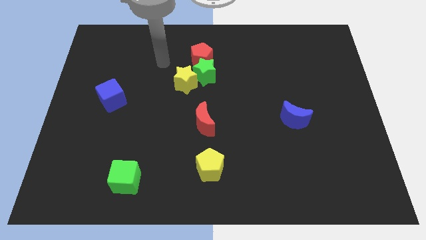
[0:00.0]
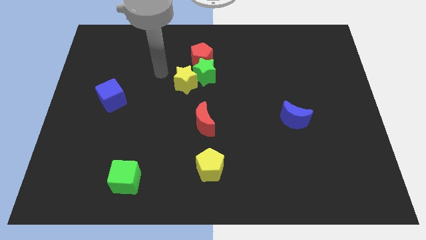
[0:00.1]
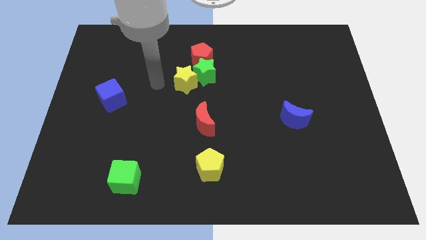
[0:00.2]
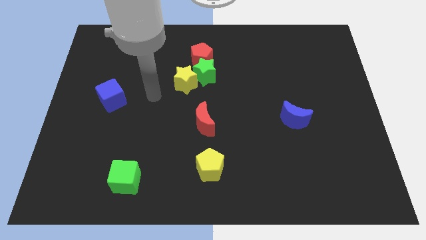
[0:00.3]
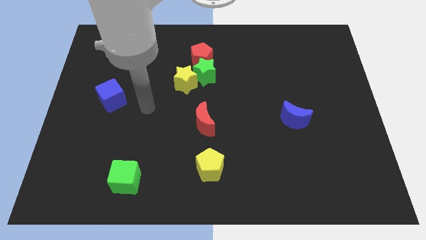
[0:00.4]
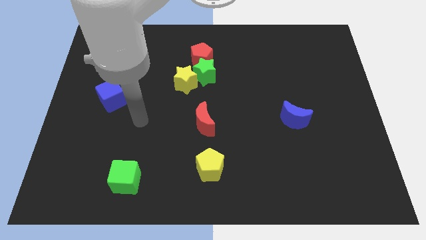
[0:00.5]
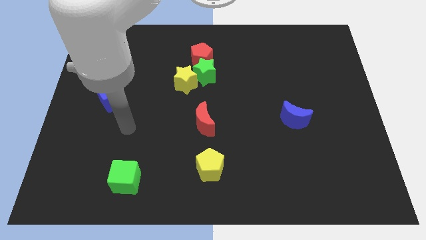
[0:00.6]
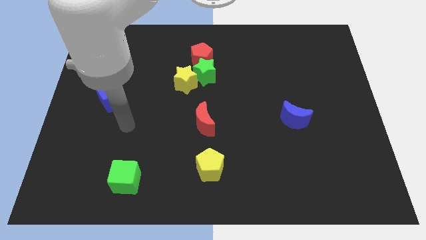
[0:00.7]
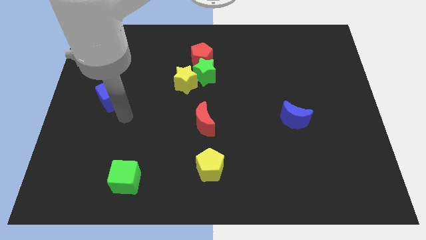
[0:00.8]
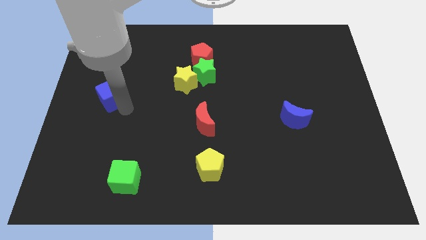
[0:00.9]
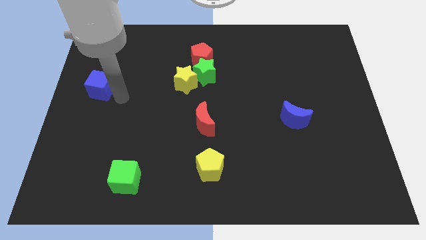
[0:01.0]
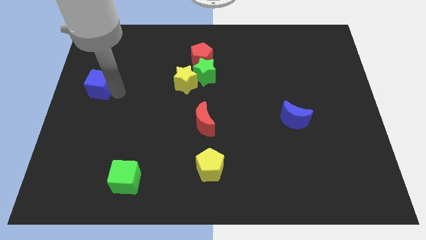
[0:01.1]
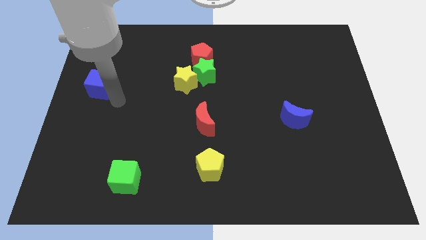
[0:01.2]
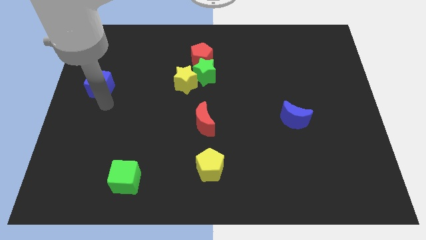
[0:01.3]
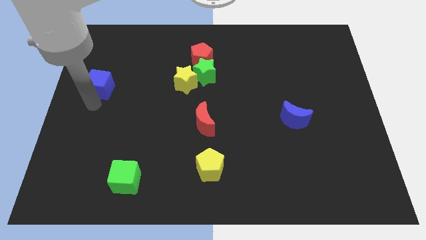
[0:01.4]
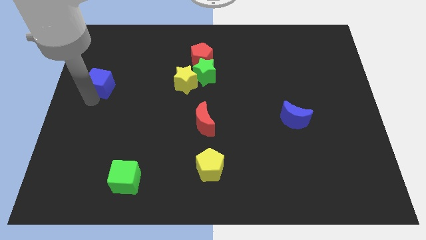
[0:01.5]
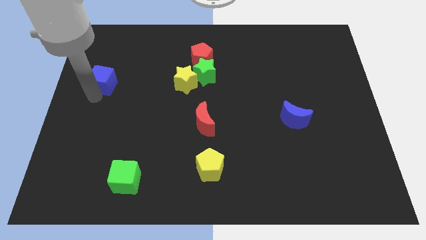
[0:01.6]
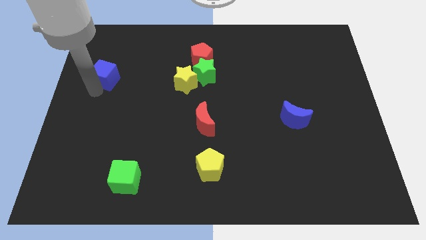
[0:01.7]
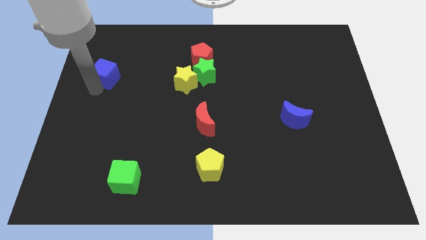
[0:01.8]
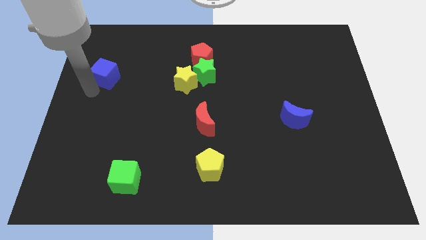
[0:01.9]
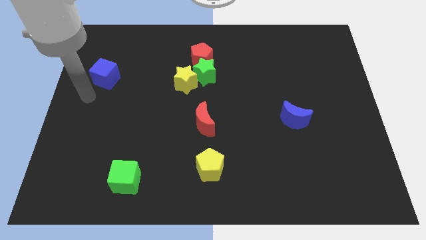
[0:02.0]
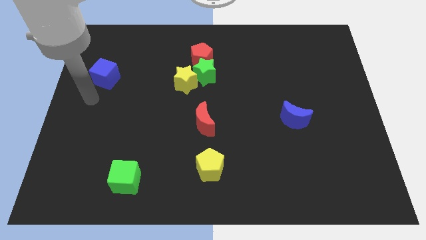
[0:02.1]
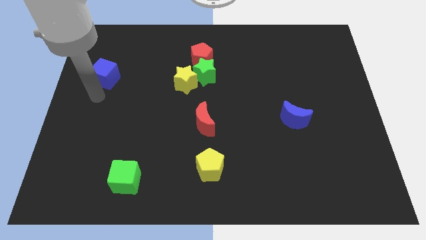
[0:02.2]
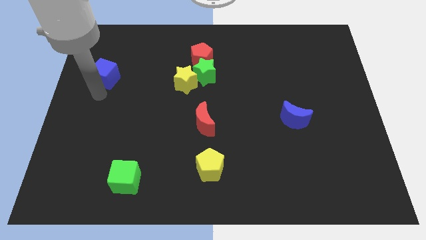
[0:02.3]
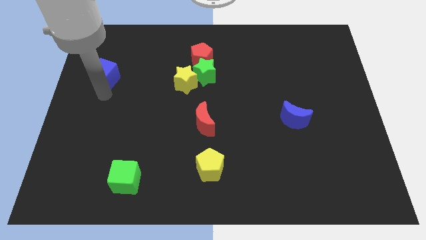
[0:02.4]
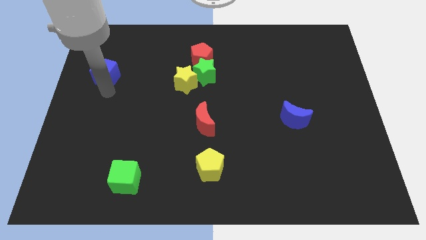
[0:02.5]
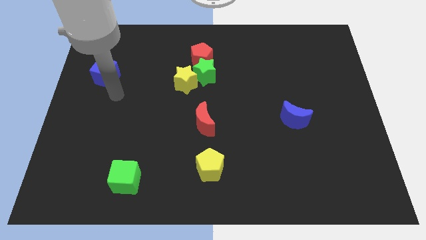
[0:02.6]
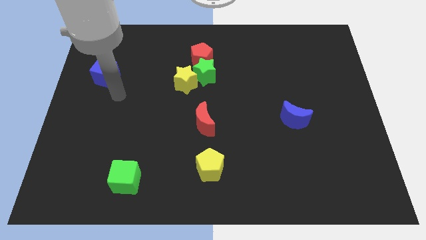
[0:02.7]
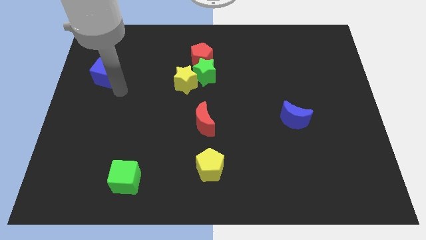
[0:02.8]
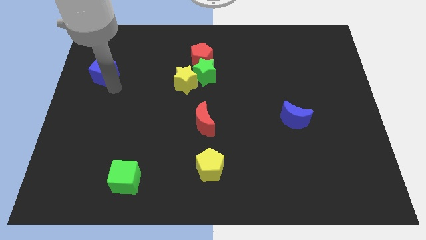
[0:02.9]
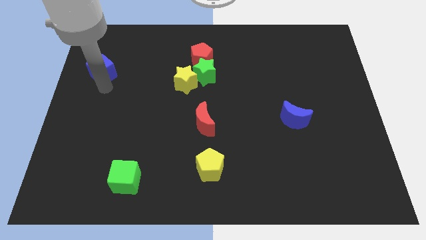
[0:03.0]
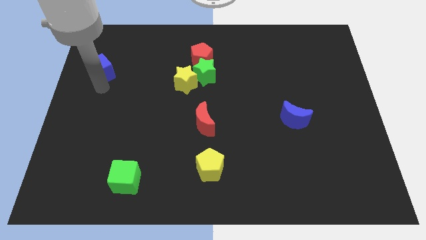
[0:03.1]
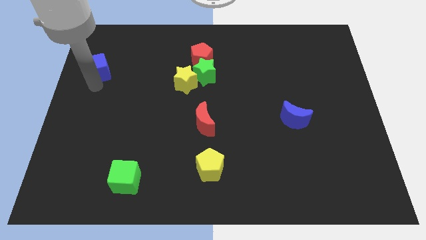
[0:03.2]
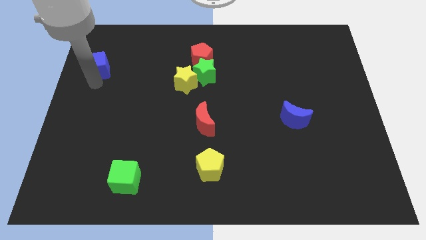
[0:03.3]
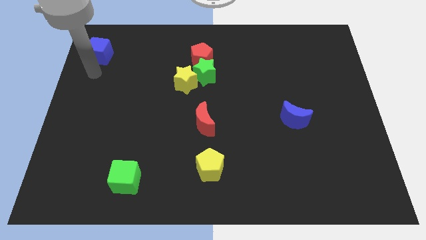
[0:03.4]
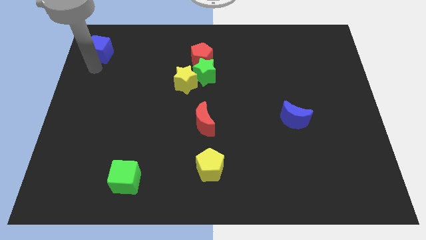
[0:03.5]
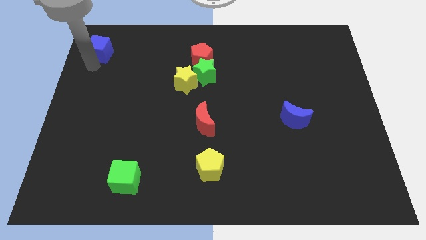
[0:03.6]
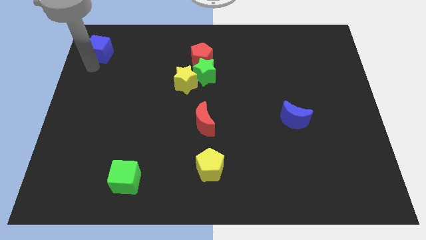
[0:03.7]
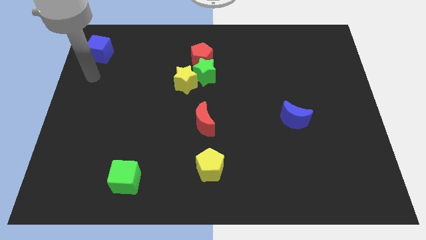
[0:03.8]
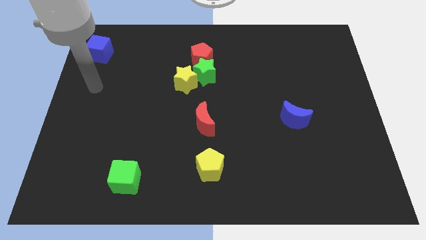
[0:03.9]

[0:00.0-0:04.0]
move the blue cube to the top left corner

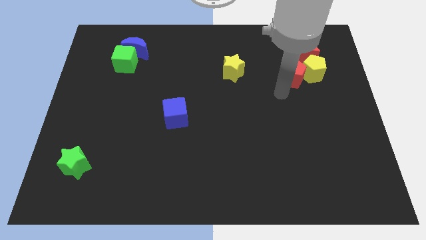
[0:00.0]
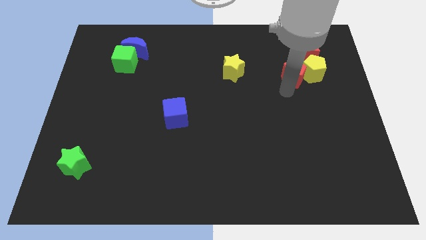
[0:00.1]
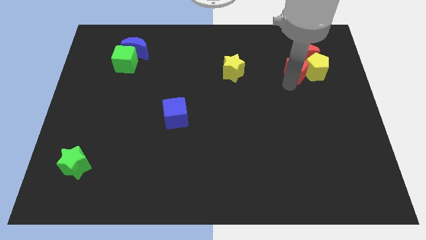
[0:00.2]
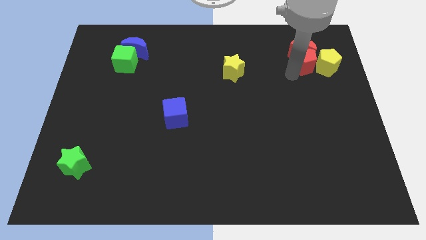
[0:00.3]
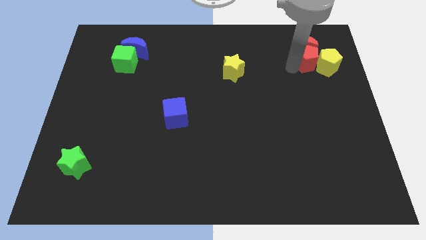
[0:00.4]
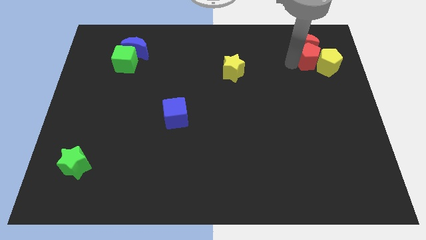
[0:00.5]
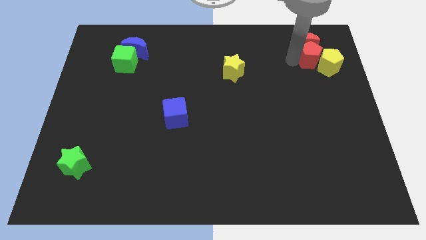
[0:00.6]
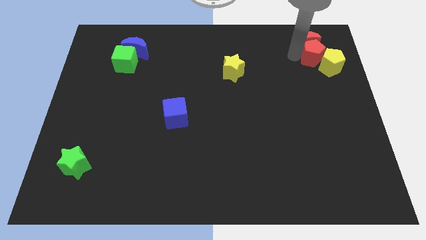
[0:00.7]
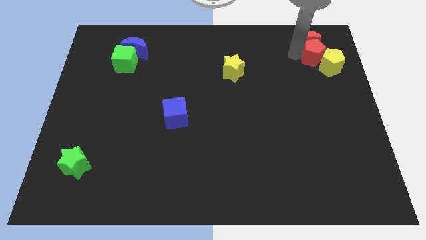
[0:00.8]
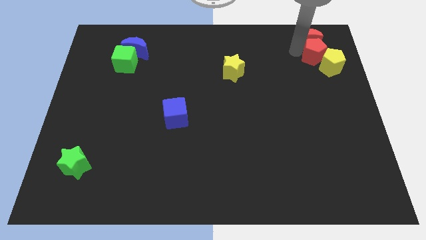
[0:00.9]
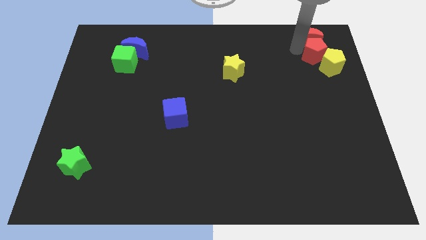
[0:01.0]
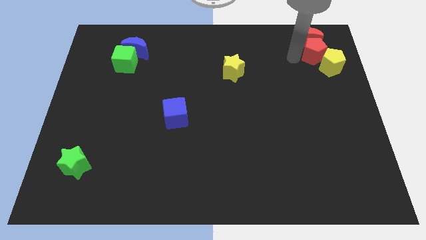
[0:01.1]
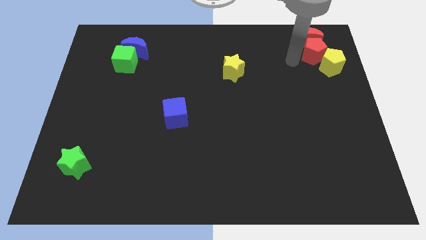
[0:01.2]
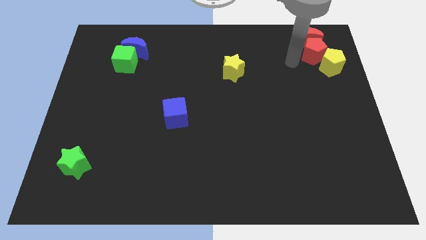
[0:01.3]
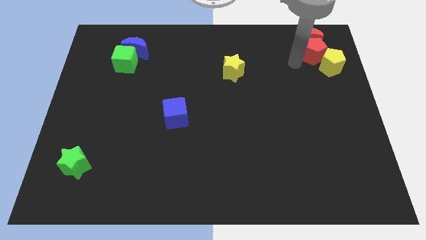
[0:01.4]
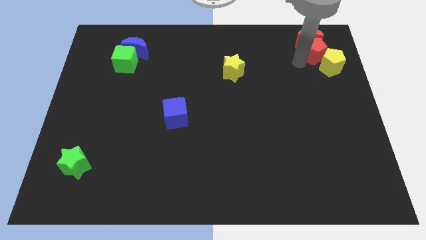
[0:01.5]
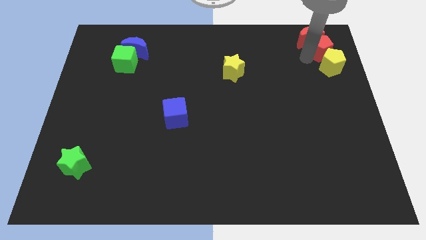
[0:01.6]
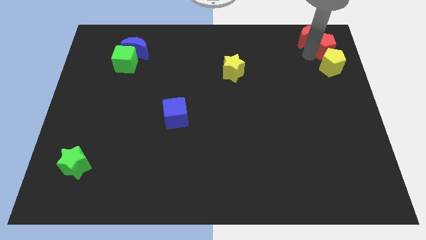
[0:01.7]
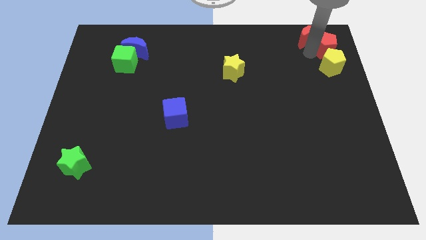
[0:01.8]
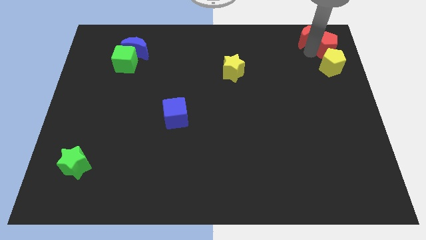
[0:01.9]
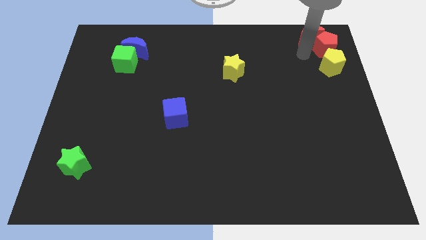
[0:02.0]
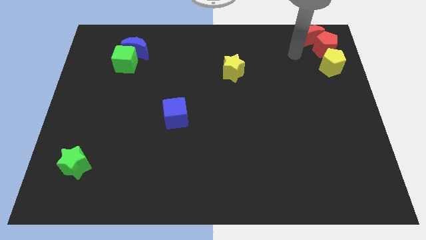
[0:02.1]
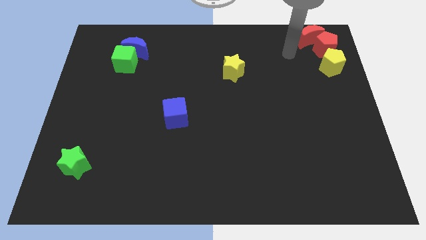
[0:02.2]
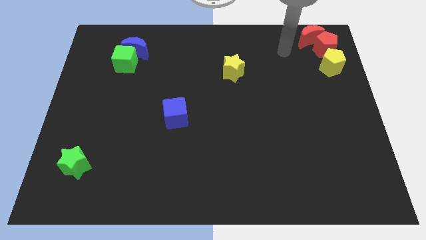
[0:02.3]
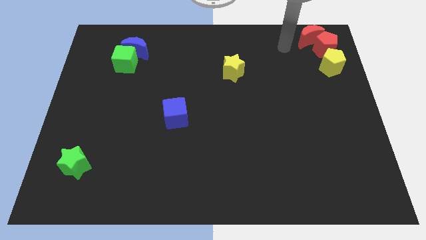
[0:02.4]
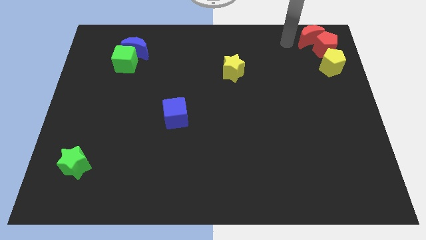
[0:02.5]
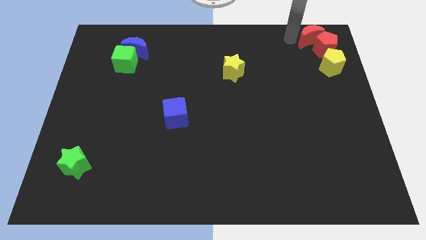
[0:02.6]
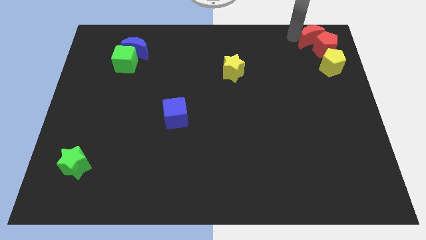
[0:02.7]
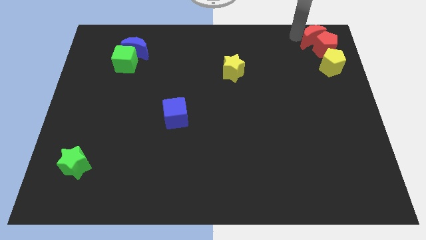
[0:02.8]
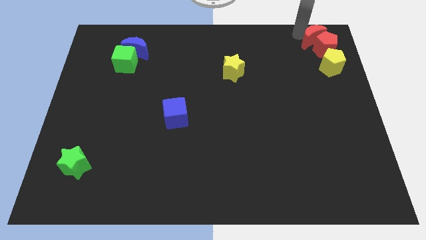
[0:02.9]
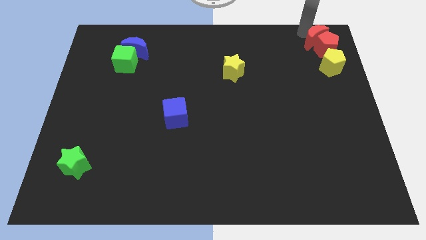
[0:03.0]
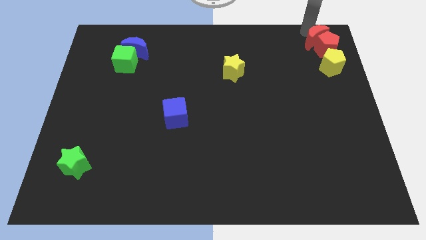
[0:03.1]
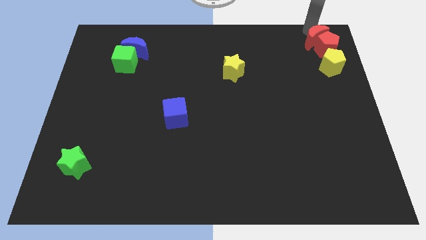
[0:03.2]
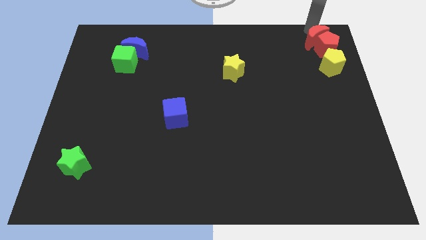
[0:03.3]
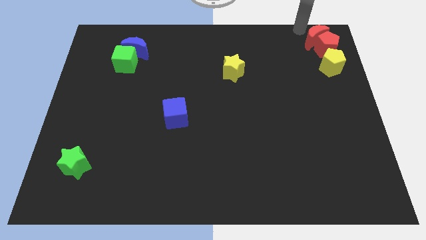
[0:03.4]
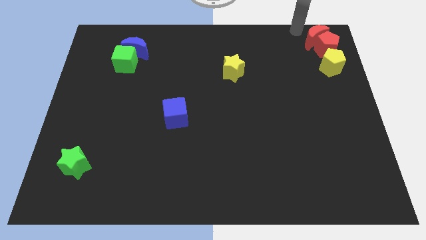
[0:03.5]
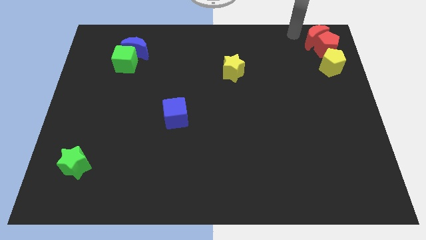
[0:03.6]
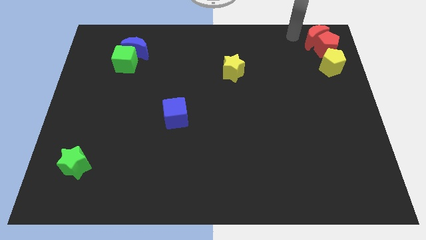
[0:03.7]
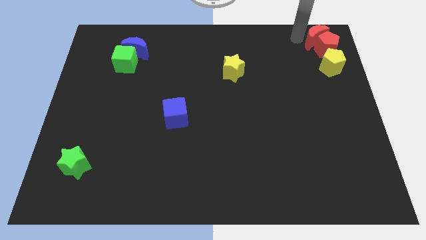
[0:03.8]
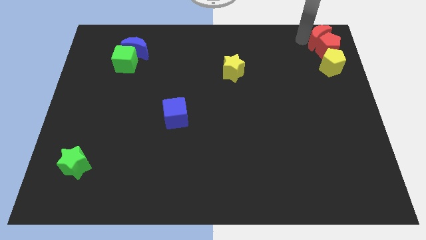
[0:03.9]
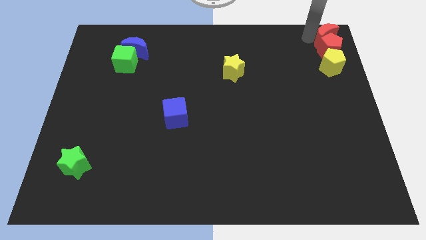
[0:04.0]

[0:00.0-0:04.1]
move the red crescent and red pentagon above the yellow pentagon

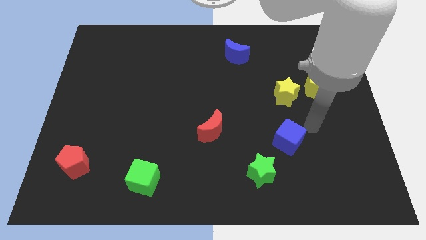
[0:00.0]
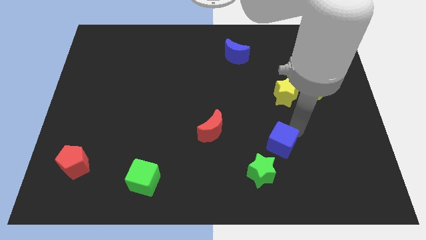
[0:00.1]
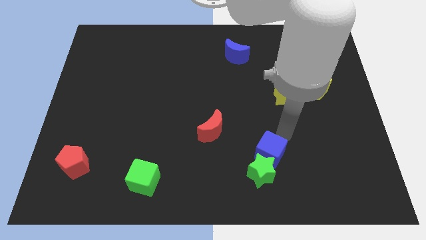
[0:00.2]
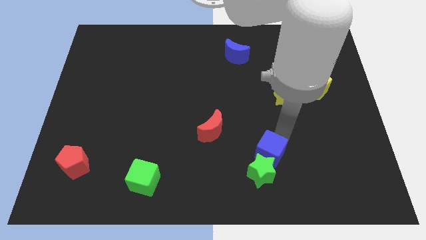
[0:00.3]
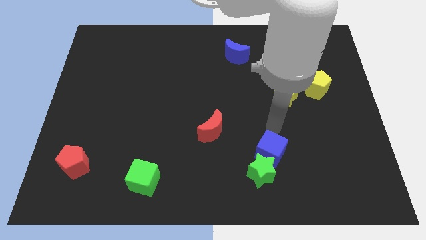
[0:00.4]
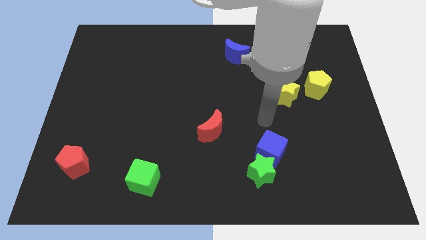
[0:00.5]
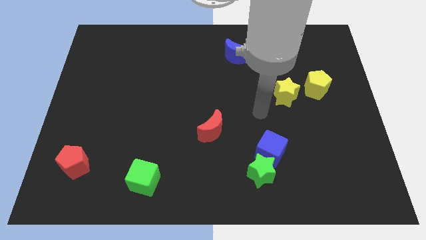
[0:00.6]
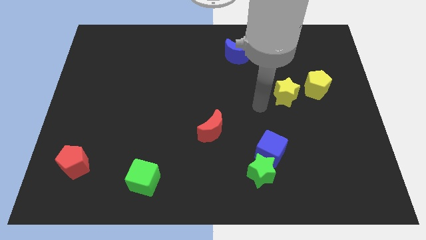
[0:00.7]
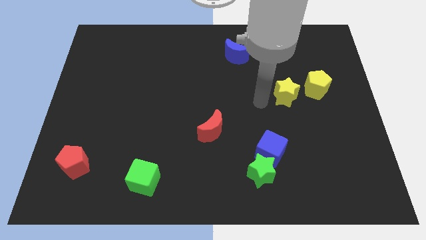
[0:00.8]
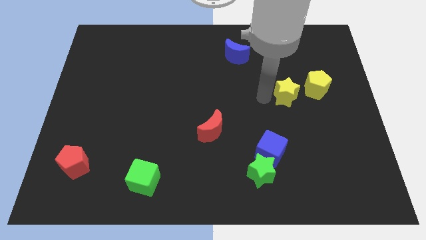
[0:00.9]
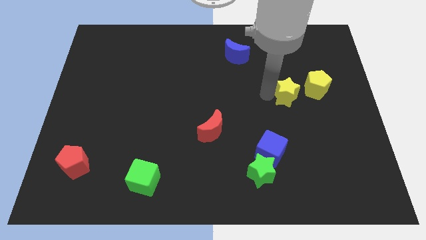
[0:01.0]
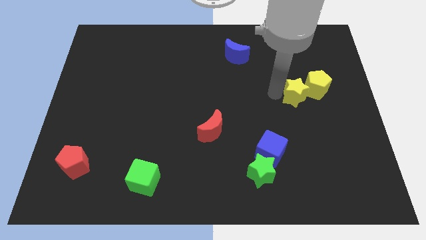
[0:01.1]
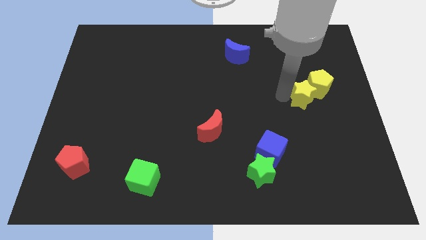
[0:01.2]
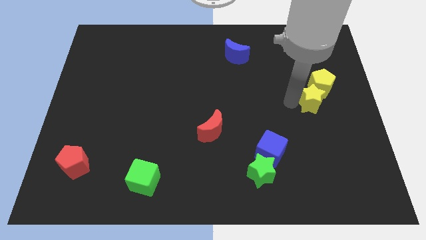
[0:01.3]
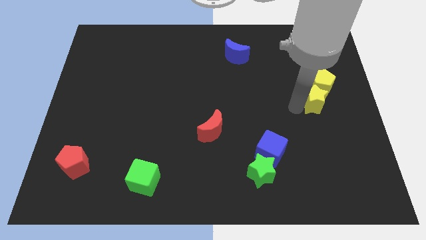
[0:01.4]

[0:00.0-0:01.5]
push blue cube into green star
